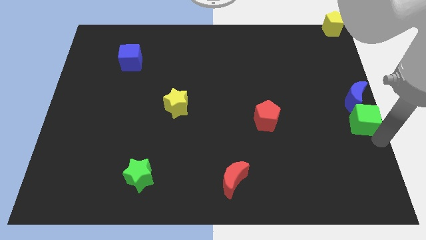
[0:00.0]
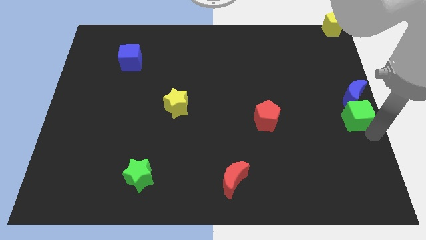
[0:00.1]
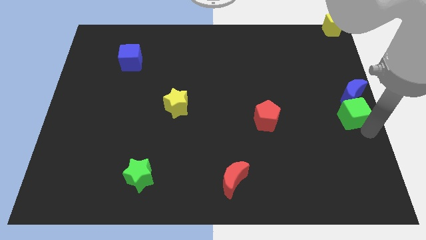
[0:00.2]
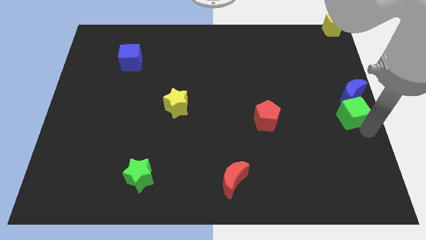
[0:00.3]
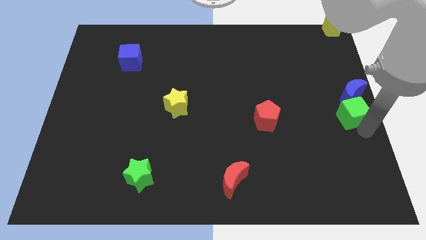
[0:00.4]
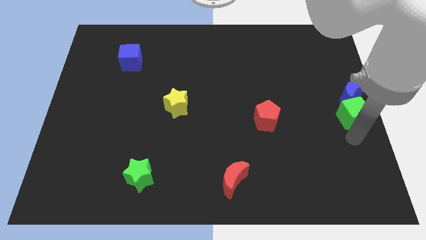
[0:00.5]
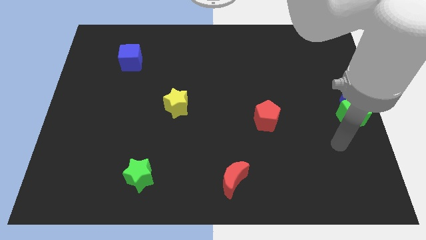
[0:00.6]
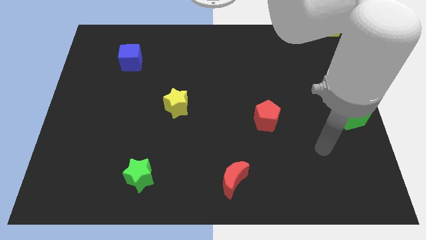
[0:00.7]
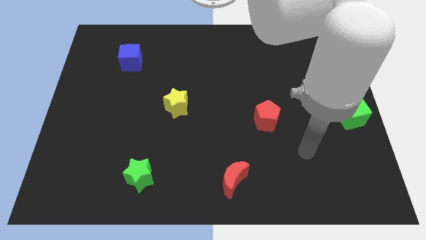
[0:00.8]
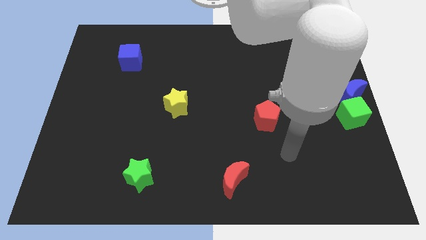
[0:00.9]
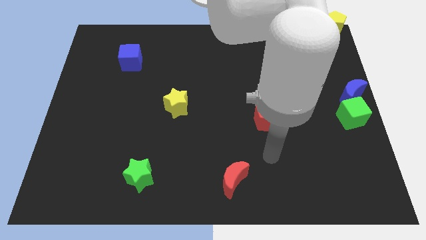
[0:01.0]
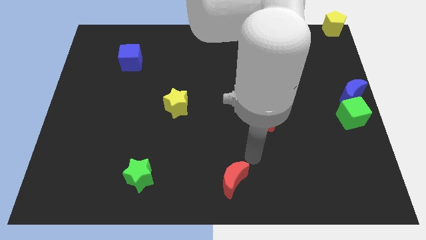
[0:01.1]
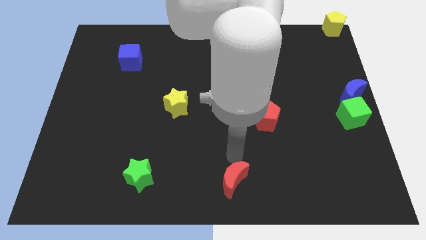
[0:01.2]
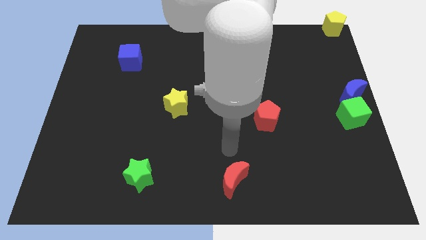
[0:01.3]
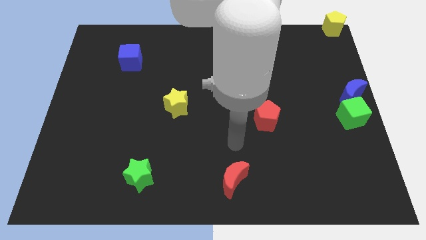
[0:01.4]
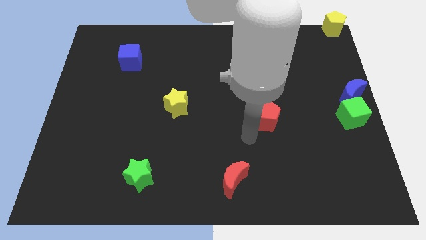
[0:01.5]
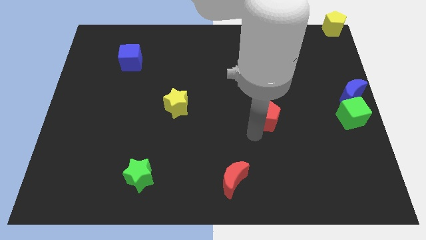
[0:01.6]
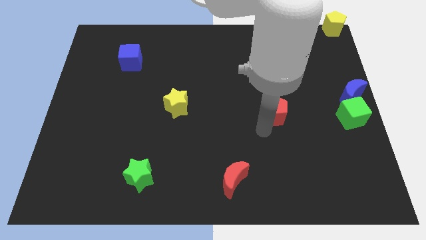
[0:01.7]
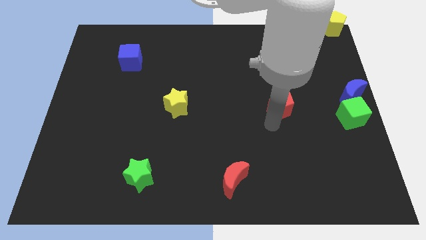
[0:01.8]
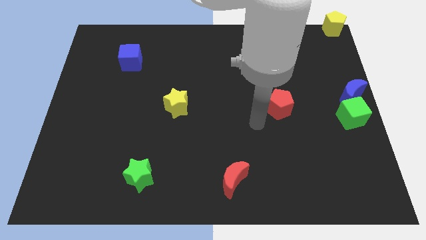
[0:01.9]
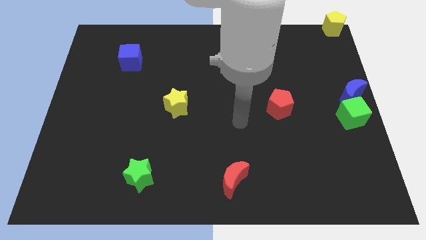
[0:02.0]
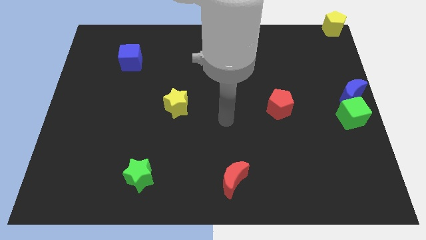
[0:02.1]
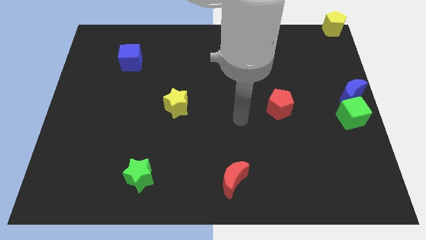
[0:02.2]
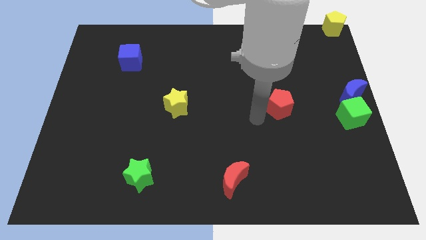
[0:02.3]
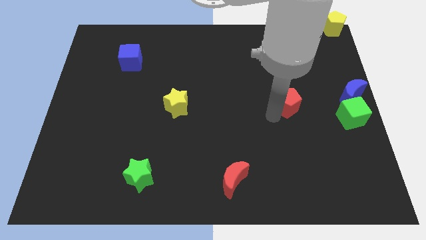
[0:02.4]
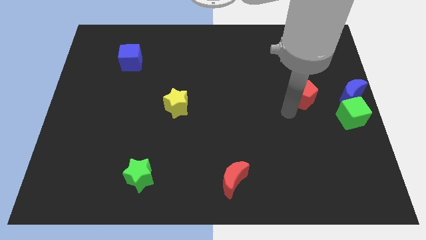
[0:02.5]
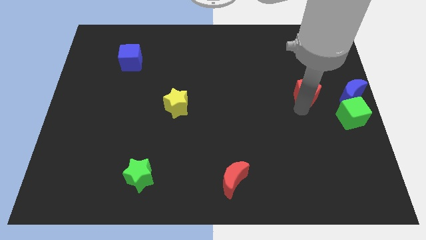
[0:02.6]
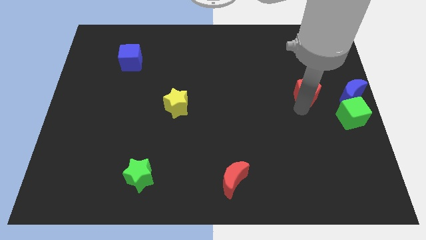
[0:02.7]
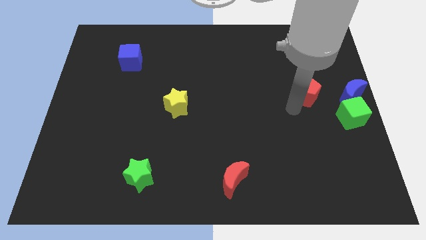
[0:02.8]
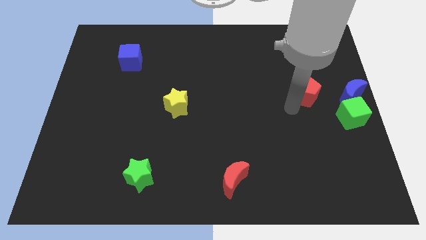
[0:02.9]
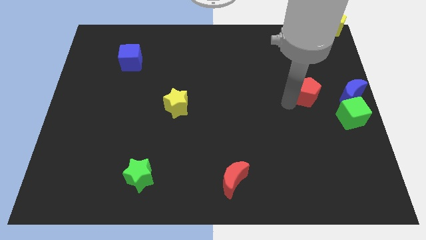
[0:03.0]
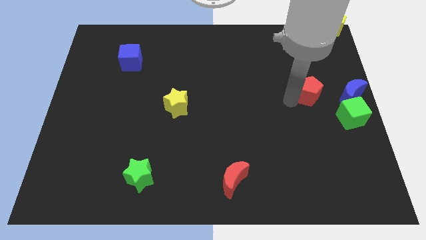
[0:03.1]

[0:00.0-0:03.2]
move the red pentagon towards the blue moon

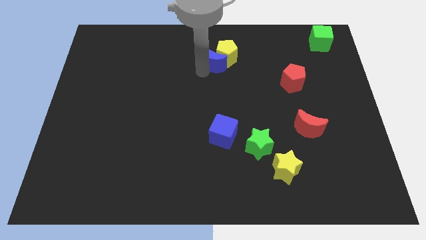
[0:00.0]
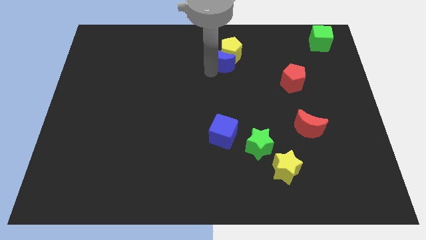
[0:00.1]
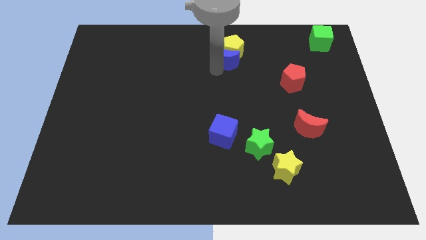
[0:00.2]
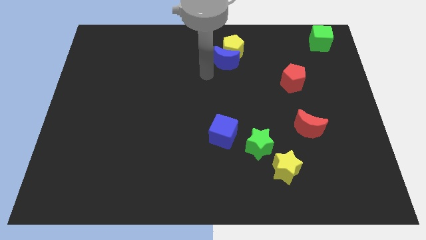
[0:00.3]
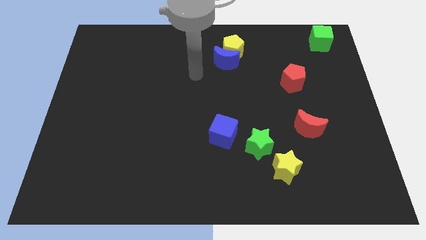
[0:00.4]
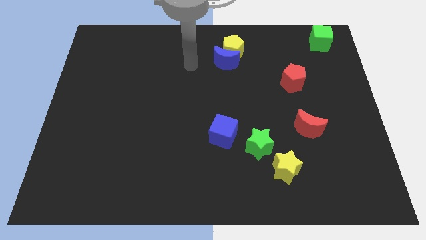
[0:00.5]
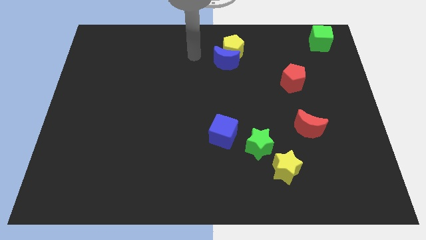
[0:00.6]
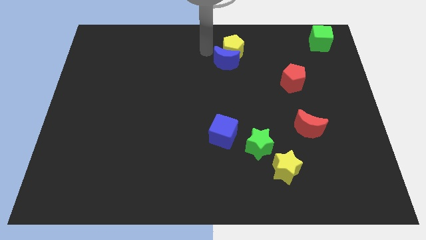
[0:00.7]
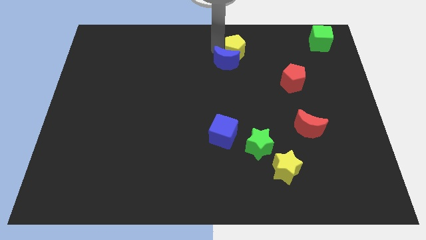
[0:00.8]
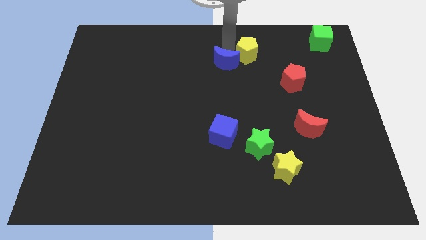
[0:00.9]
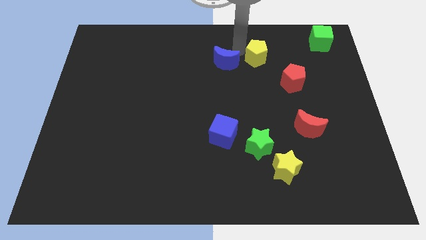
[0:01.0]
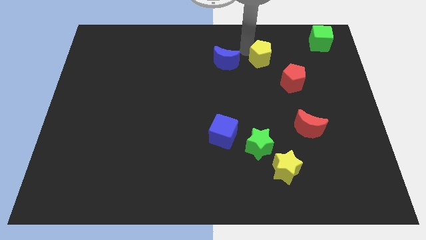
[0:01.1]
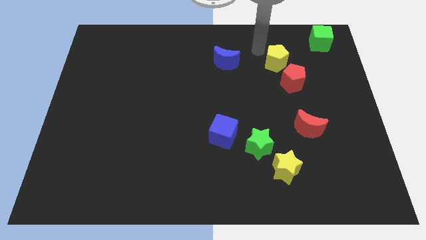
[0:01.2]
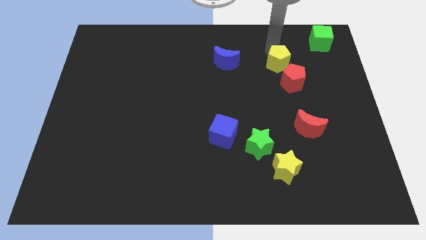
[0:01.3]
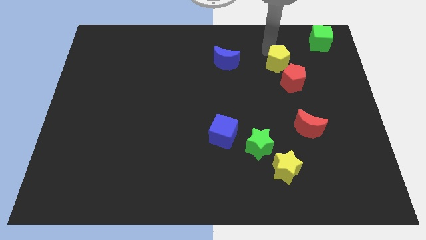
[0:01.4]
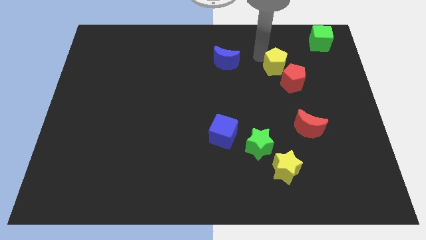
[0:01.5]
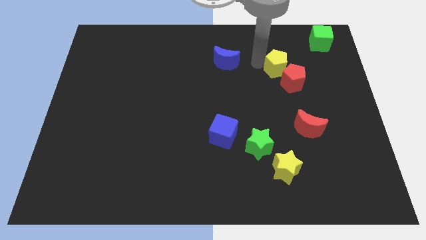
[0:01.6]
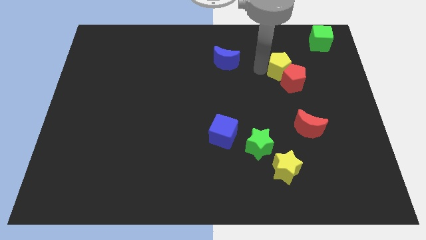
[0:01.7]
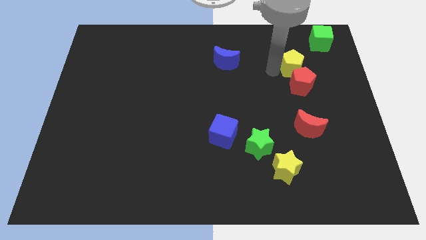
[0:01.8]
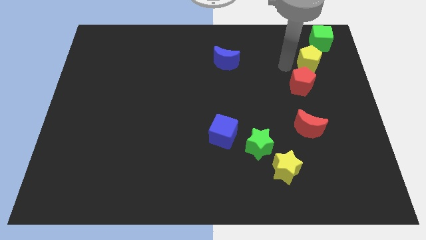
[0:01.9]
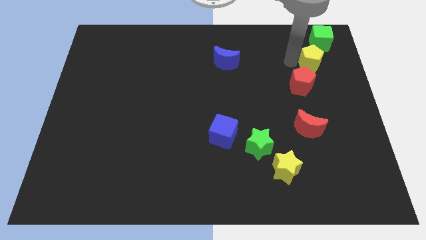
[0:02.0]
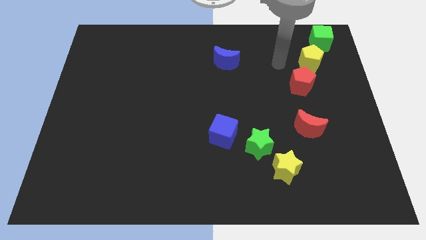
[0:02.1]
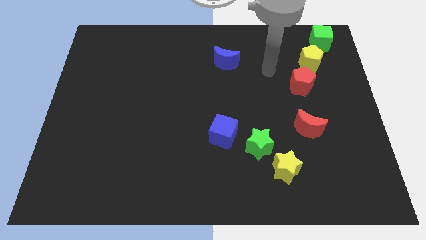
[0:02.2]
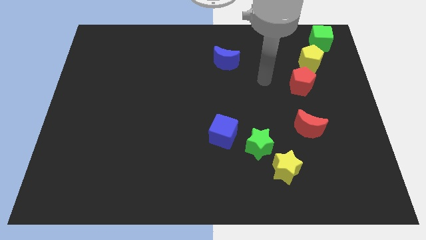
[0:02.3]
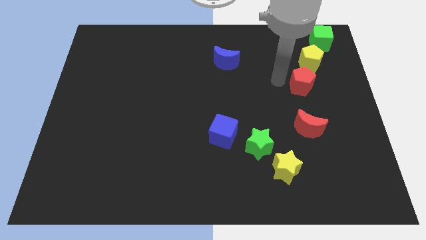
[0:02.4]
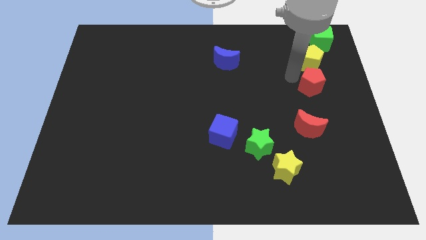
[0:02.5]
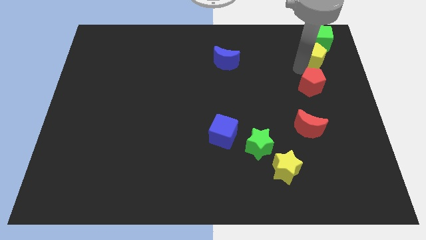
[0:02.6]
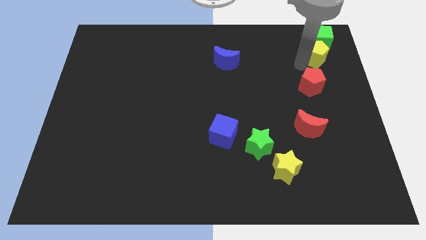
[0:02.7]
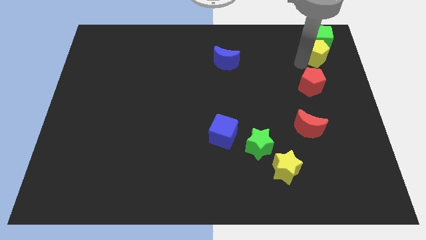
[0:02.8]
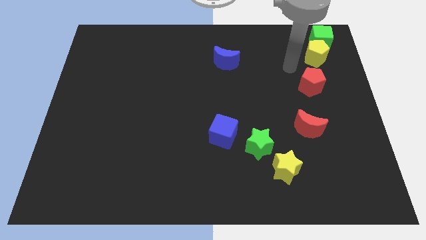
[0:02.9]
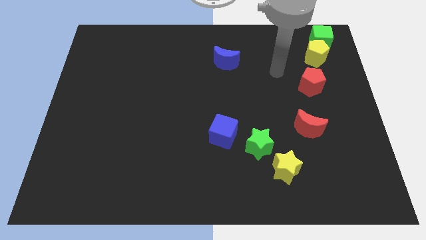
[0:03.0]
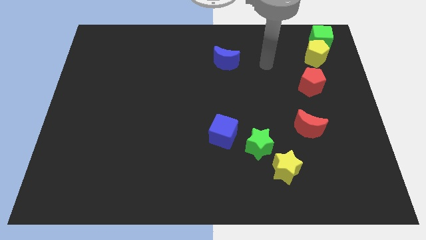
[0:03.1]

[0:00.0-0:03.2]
place the yellow pentagon in between the green cube and red pentagon

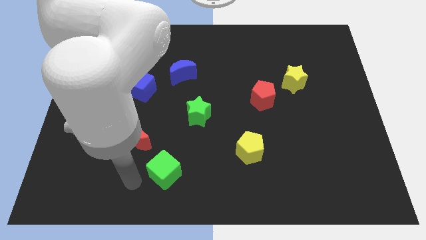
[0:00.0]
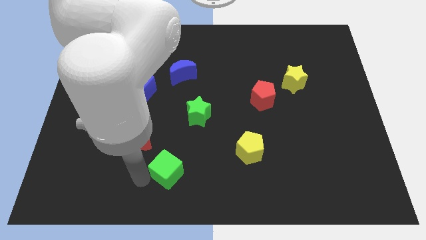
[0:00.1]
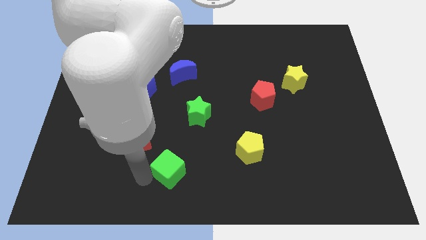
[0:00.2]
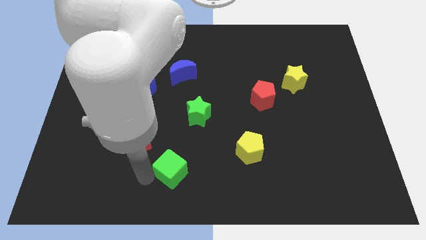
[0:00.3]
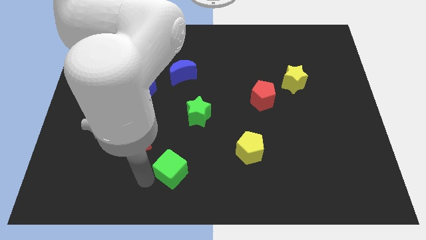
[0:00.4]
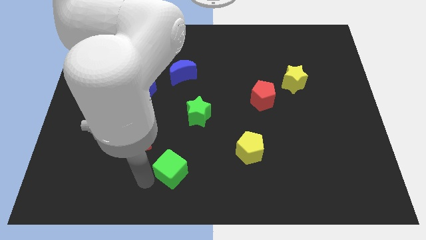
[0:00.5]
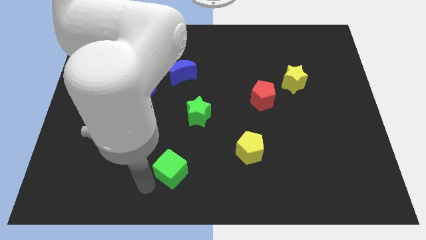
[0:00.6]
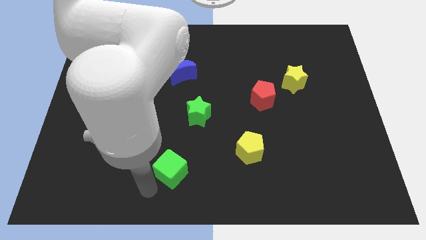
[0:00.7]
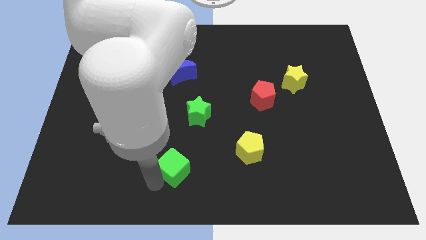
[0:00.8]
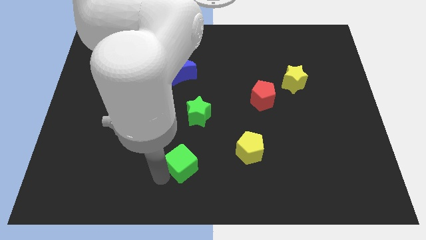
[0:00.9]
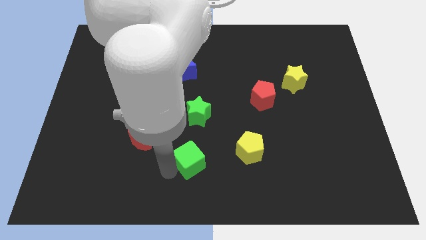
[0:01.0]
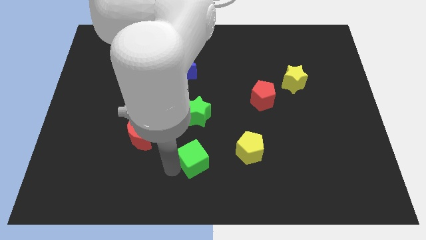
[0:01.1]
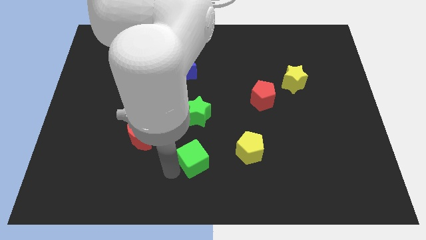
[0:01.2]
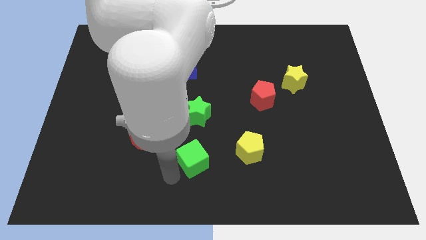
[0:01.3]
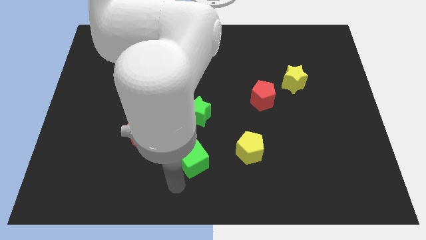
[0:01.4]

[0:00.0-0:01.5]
push the green cube near the bottom to the green star

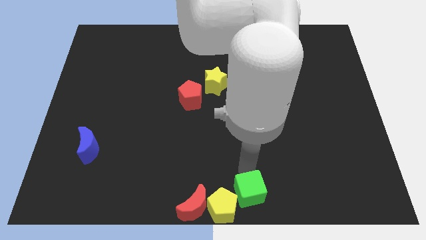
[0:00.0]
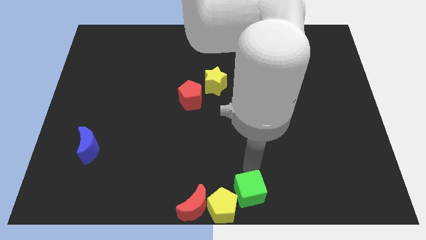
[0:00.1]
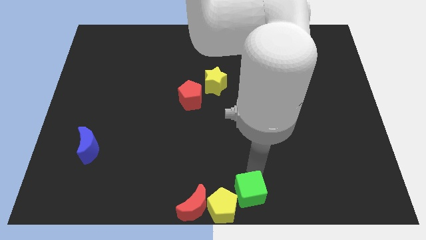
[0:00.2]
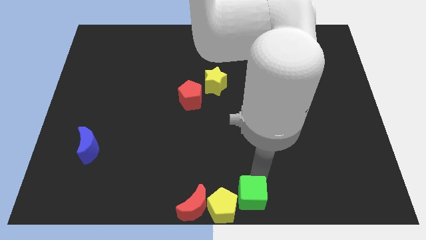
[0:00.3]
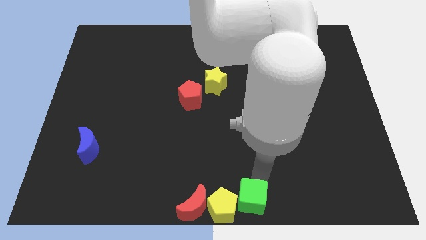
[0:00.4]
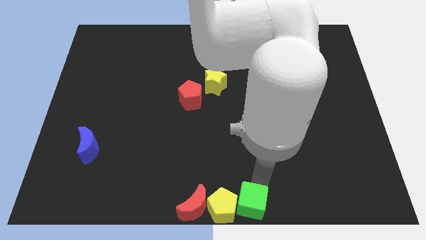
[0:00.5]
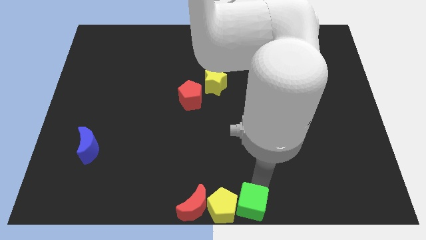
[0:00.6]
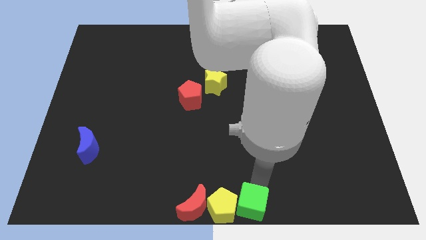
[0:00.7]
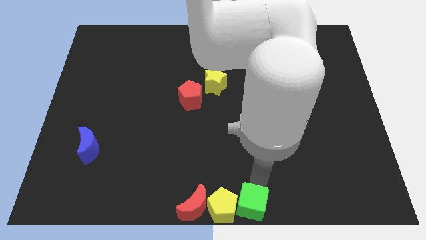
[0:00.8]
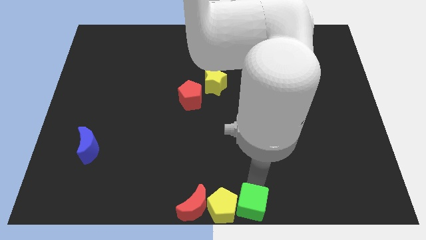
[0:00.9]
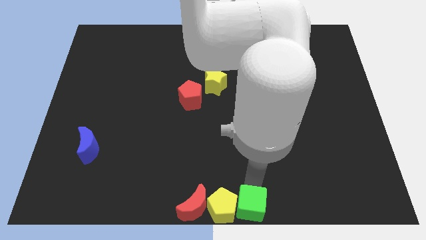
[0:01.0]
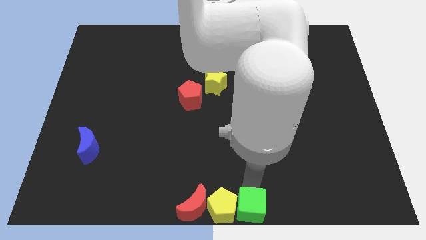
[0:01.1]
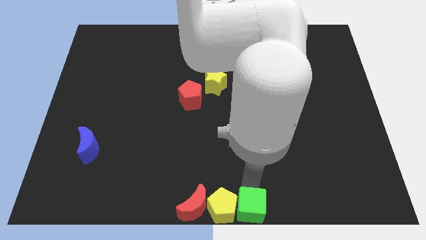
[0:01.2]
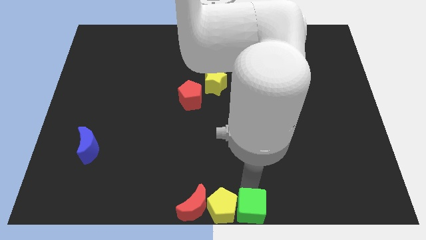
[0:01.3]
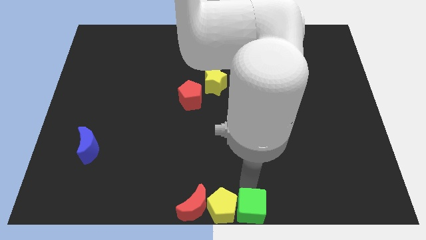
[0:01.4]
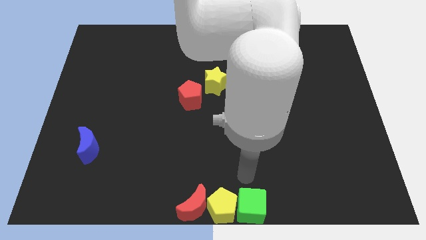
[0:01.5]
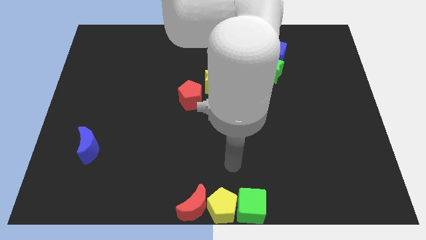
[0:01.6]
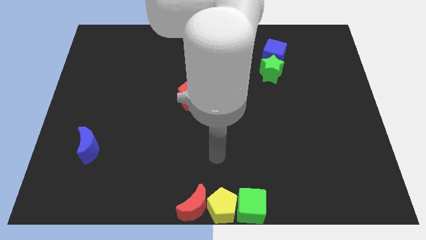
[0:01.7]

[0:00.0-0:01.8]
slide the green cube parallel right to the yellow pentagon
